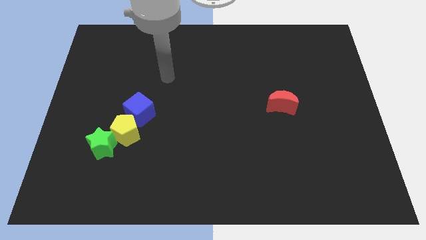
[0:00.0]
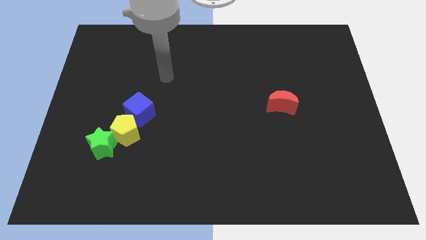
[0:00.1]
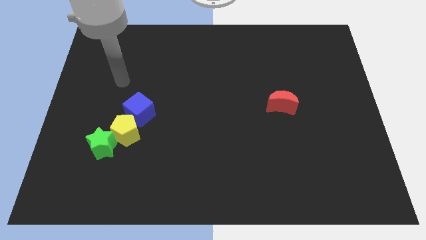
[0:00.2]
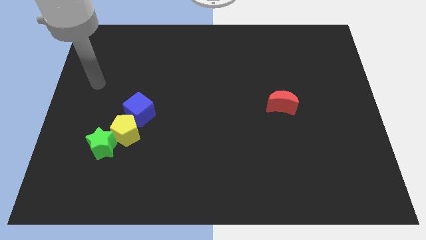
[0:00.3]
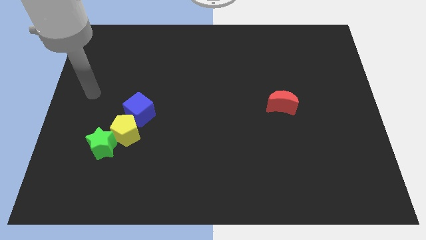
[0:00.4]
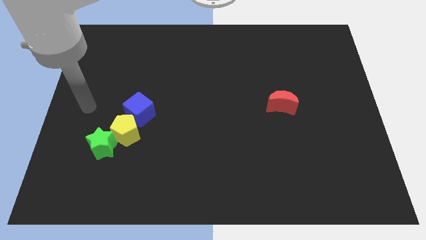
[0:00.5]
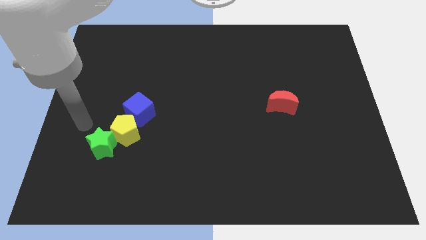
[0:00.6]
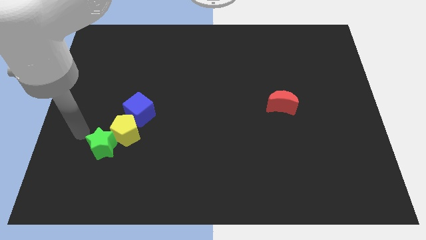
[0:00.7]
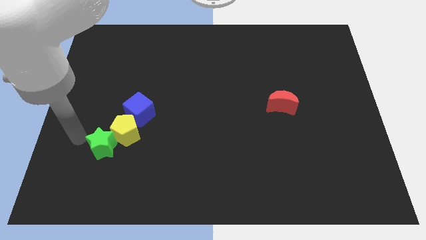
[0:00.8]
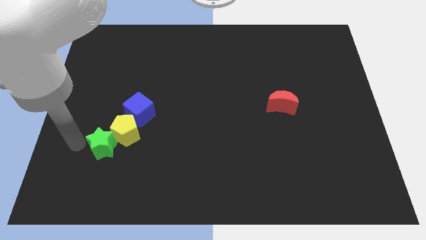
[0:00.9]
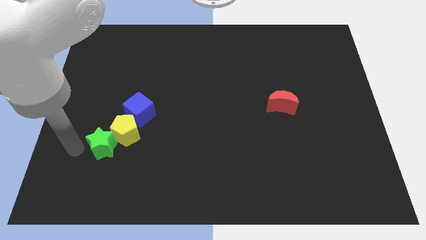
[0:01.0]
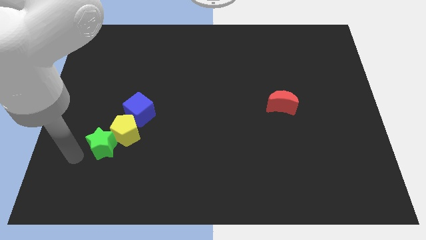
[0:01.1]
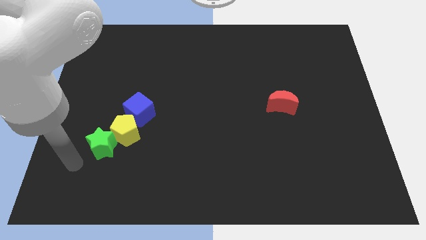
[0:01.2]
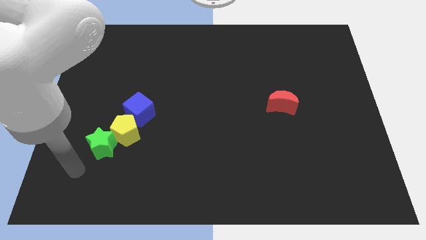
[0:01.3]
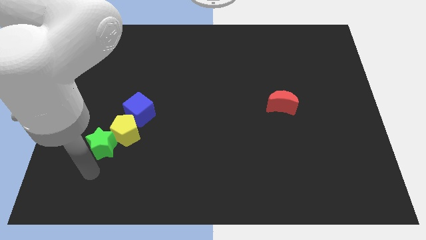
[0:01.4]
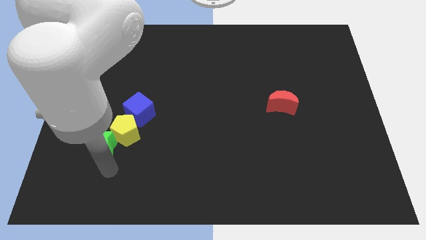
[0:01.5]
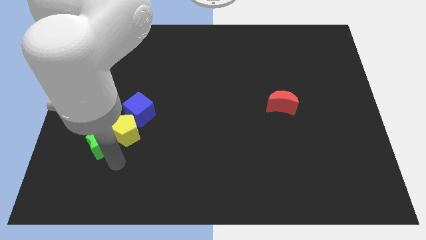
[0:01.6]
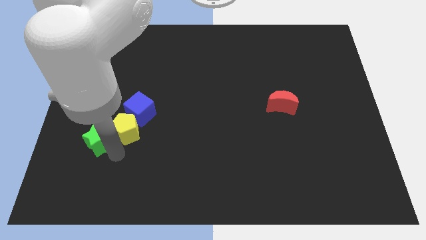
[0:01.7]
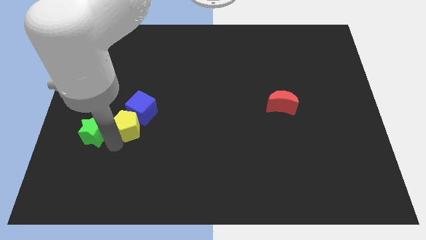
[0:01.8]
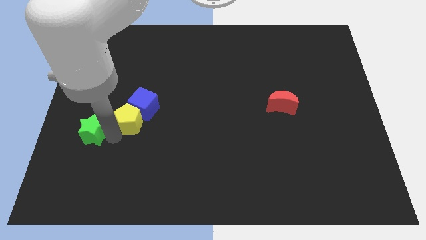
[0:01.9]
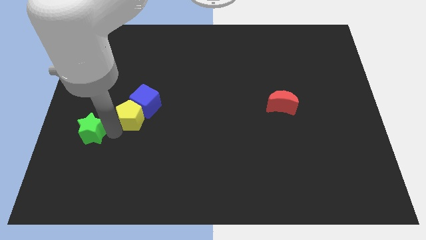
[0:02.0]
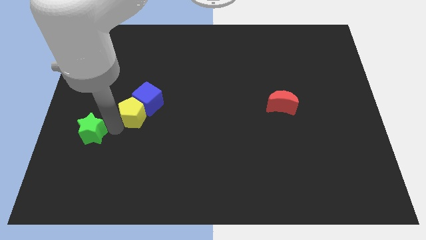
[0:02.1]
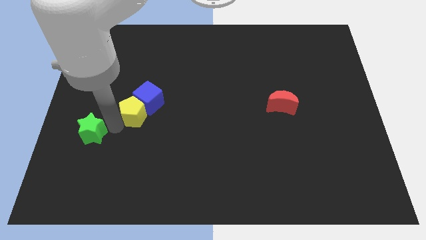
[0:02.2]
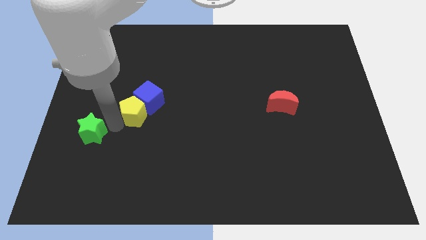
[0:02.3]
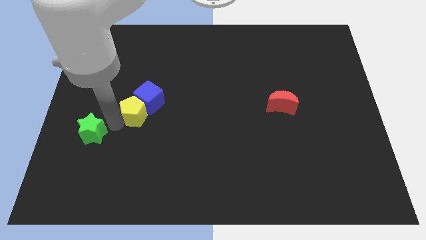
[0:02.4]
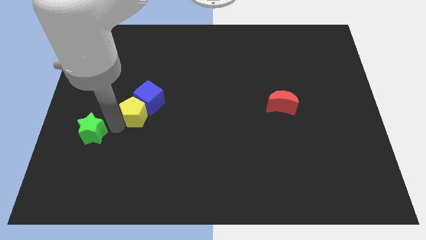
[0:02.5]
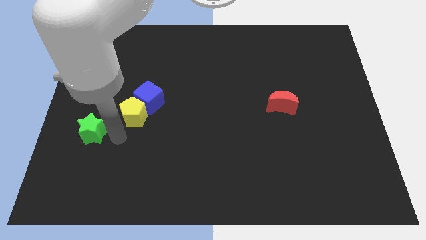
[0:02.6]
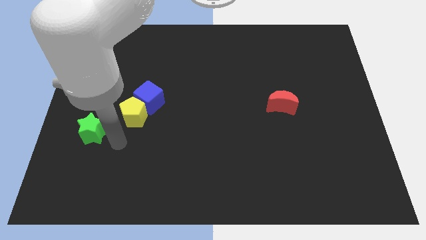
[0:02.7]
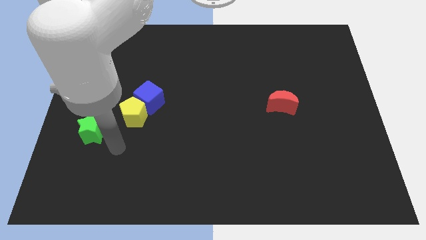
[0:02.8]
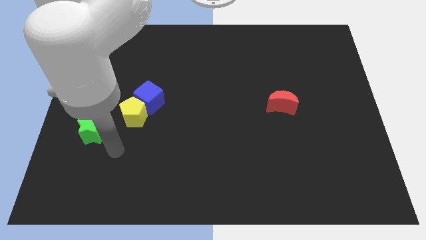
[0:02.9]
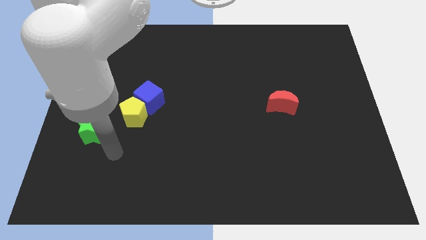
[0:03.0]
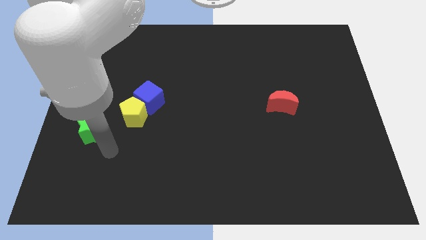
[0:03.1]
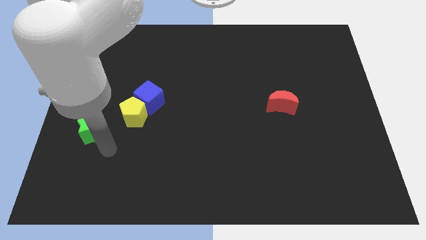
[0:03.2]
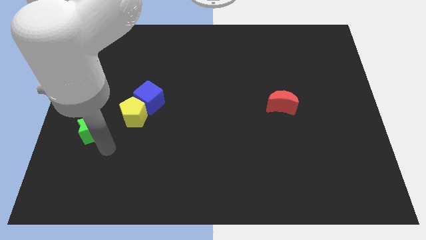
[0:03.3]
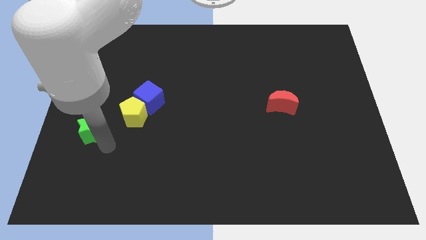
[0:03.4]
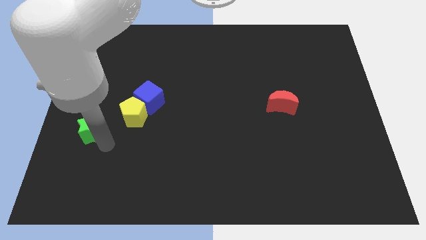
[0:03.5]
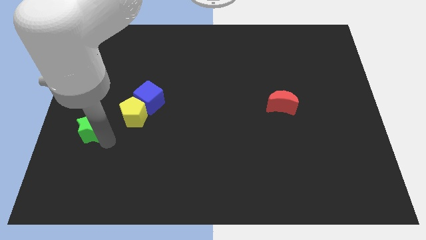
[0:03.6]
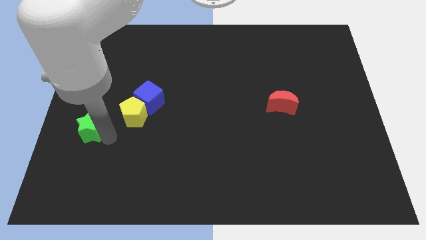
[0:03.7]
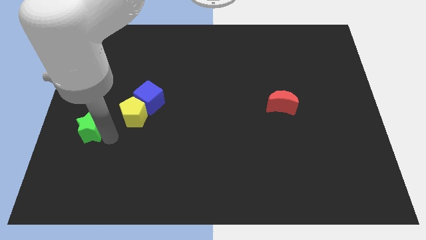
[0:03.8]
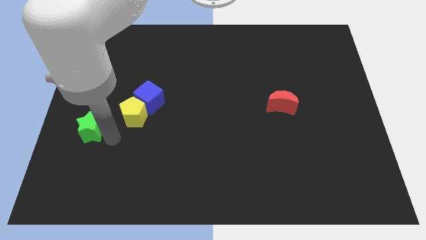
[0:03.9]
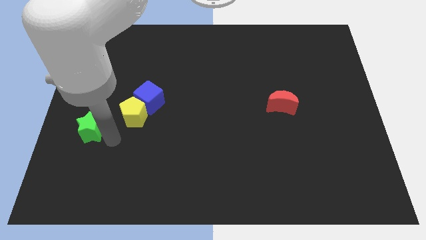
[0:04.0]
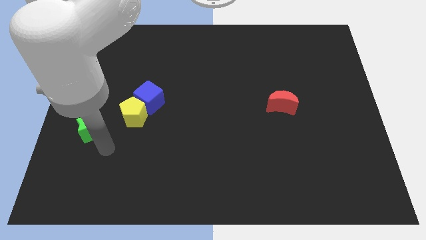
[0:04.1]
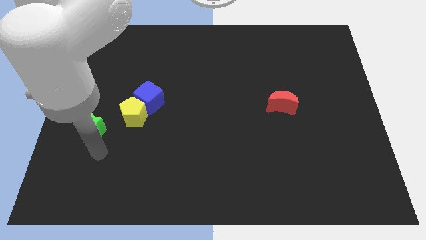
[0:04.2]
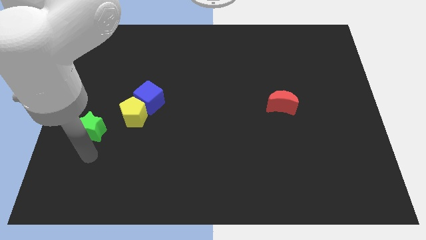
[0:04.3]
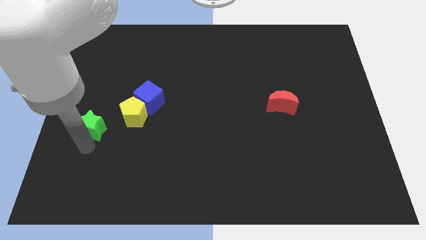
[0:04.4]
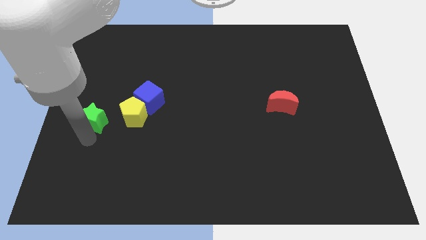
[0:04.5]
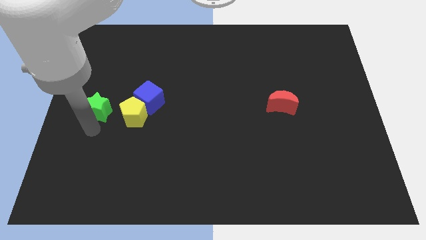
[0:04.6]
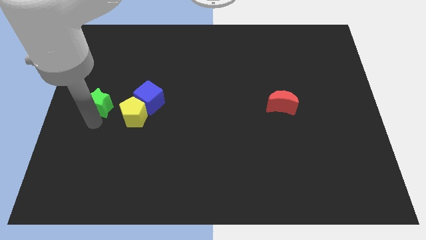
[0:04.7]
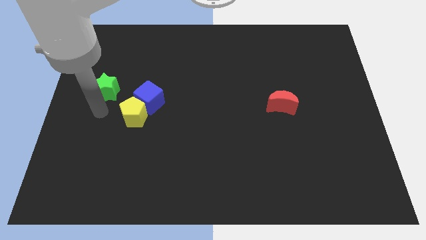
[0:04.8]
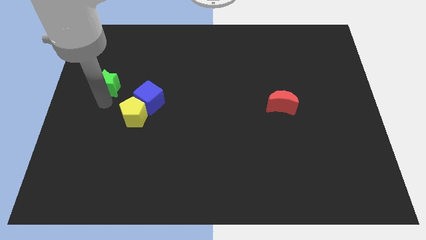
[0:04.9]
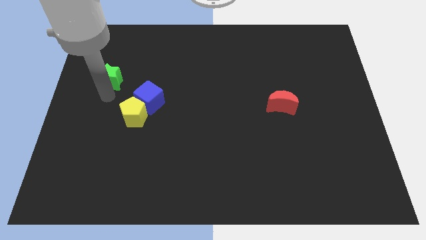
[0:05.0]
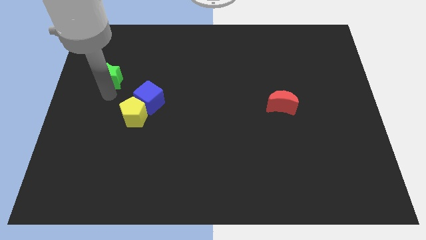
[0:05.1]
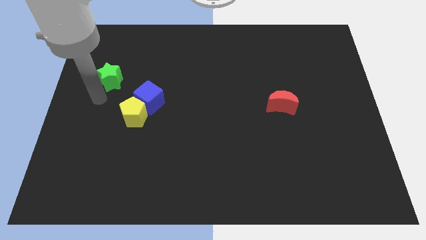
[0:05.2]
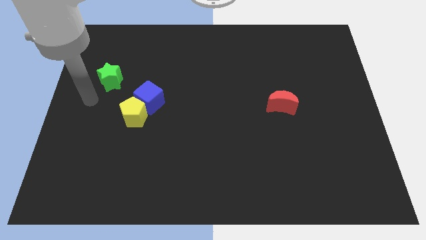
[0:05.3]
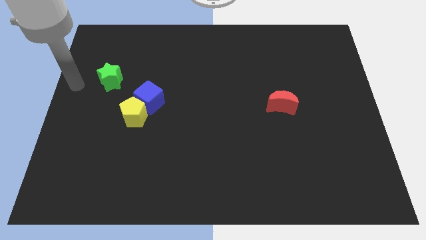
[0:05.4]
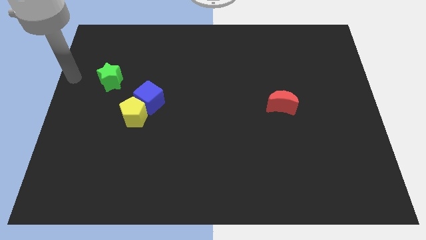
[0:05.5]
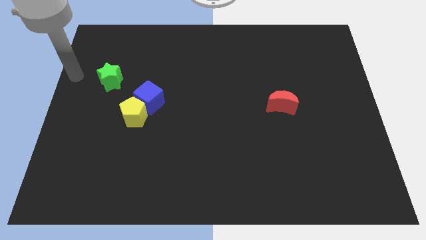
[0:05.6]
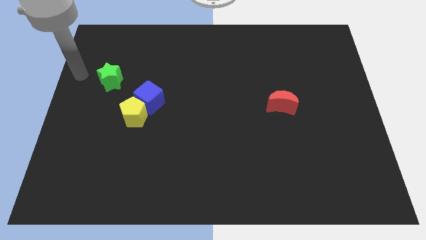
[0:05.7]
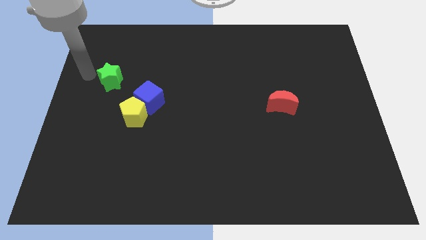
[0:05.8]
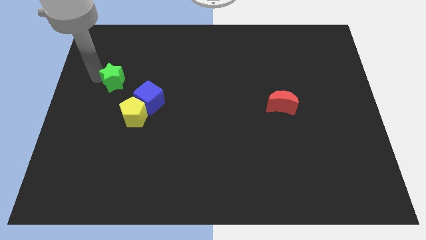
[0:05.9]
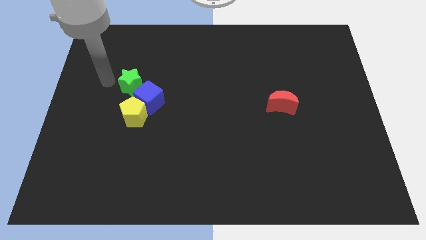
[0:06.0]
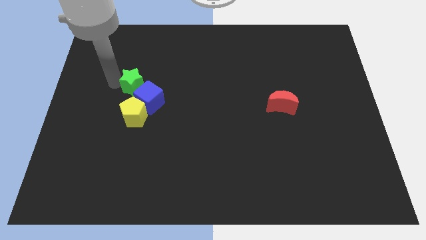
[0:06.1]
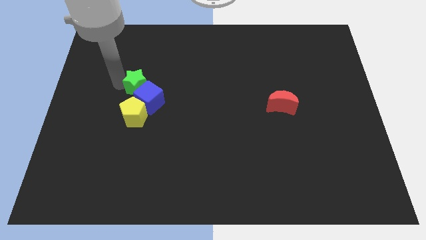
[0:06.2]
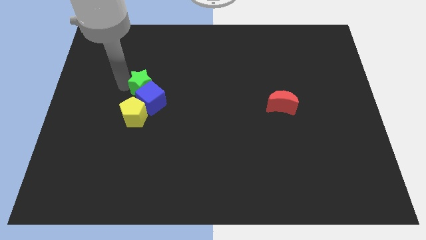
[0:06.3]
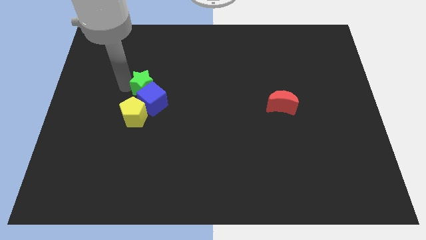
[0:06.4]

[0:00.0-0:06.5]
put the star next to the blue cube

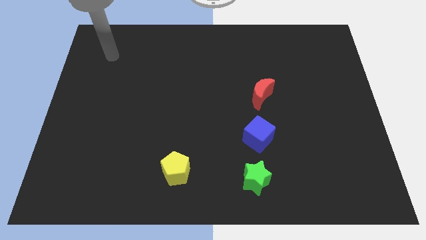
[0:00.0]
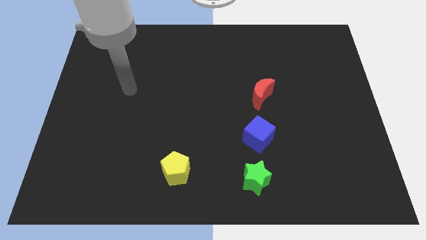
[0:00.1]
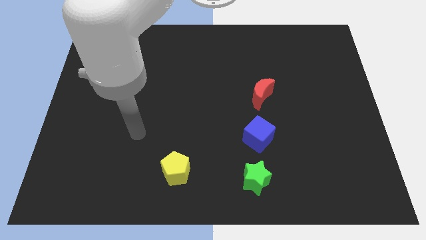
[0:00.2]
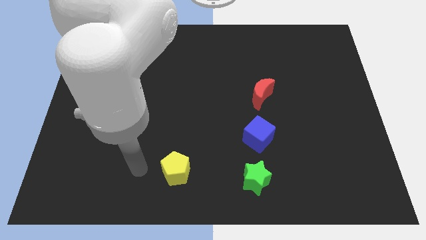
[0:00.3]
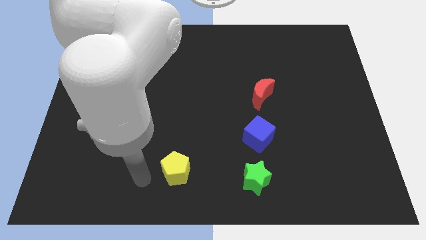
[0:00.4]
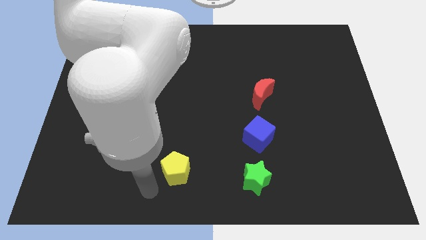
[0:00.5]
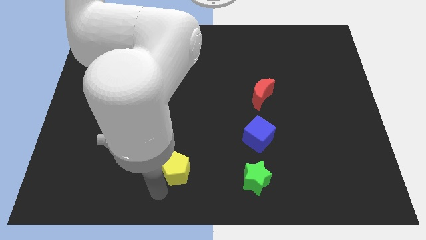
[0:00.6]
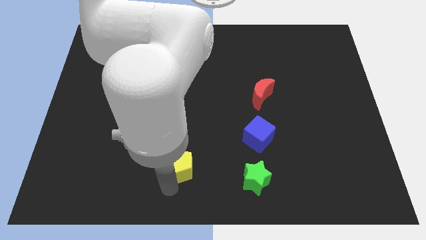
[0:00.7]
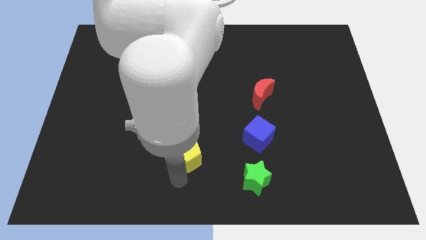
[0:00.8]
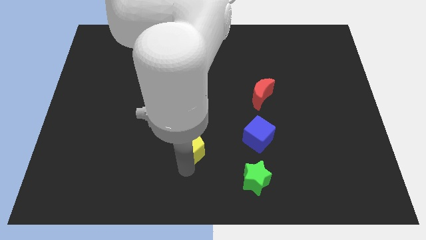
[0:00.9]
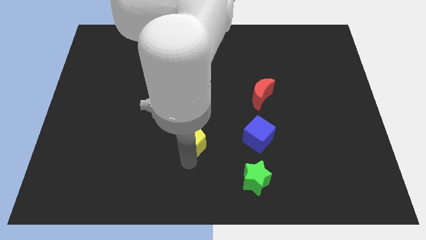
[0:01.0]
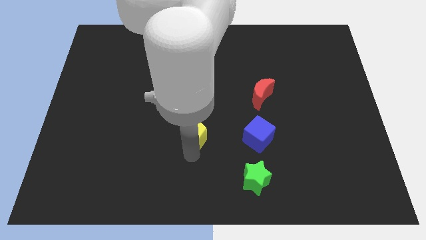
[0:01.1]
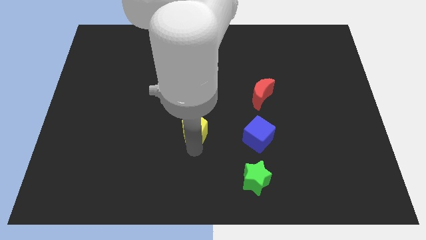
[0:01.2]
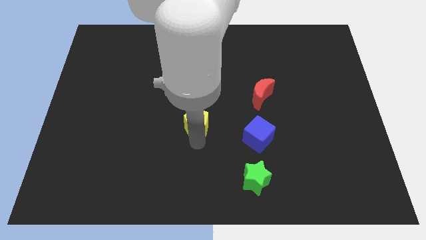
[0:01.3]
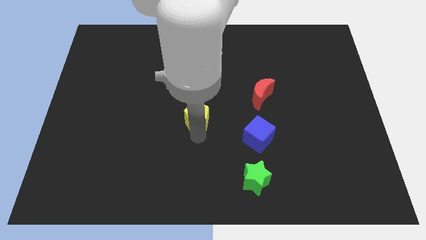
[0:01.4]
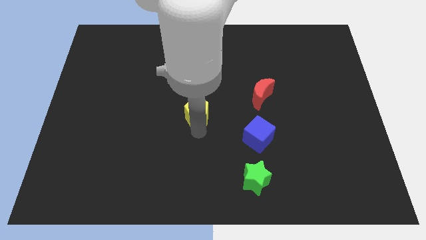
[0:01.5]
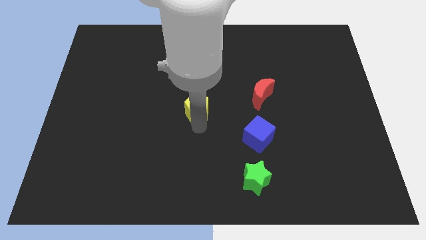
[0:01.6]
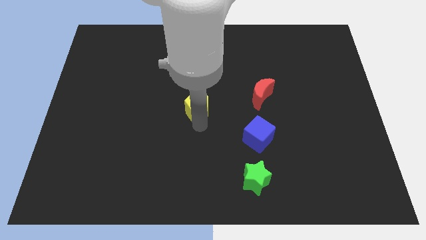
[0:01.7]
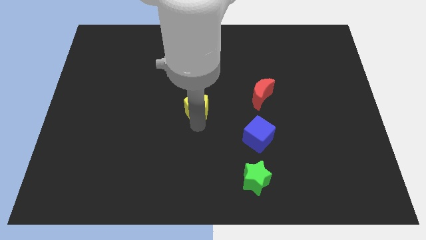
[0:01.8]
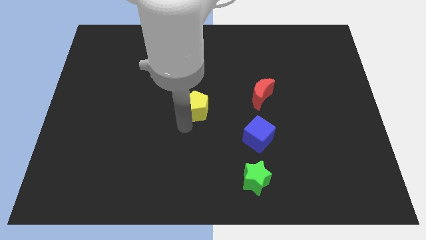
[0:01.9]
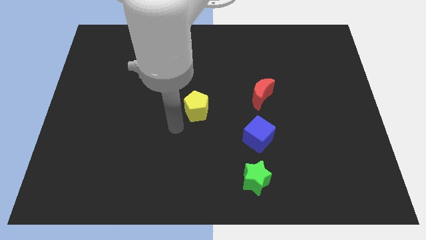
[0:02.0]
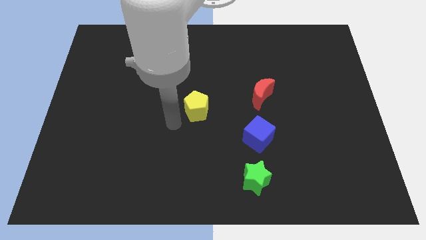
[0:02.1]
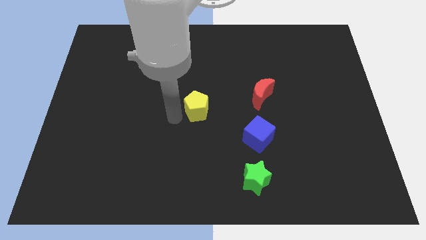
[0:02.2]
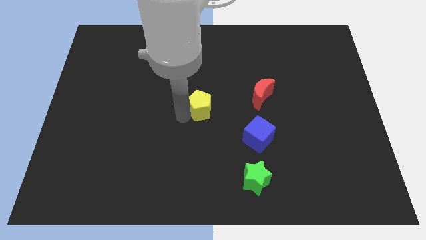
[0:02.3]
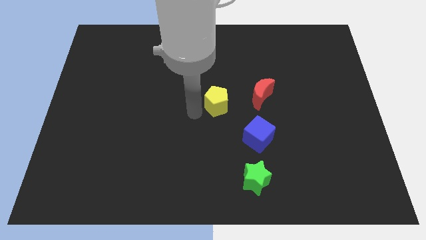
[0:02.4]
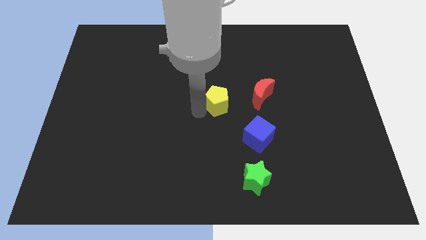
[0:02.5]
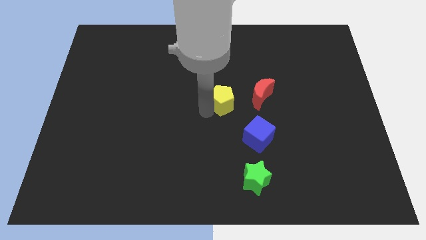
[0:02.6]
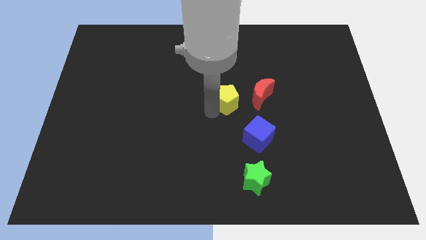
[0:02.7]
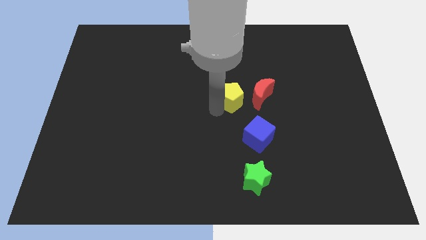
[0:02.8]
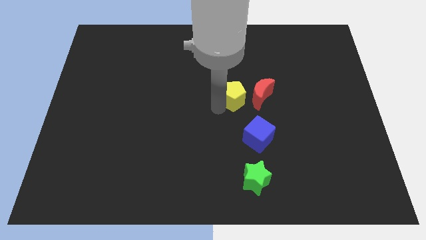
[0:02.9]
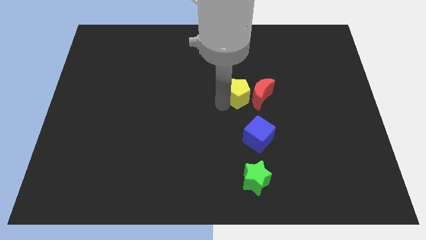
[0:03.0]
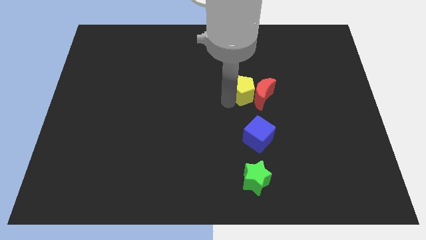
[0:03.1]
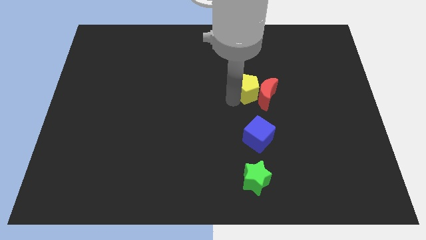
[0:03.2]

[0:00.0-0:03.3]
move the pentagon towards the red block
